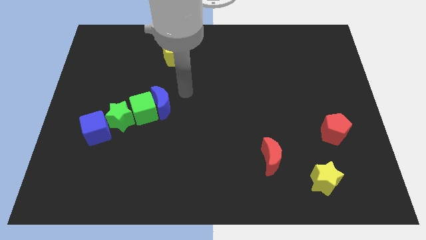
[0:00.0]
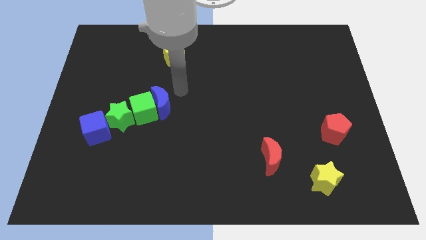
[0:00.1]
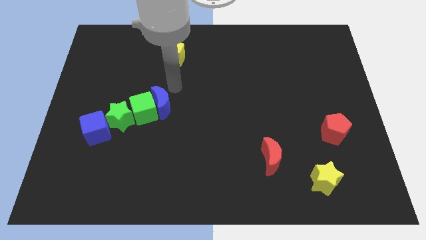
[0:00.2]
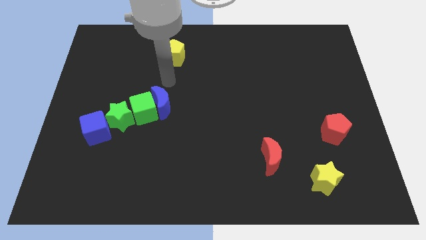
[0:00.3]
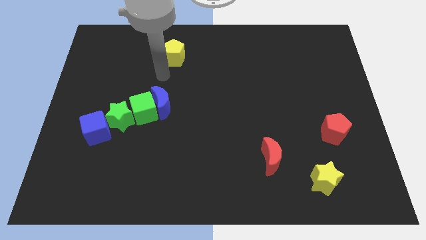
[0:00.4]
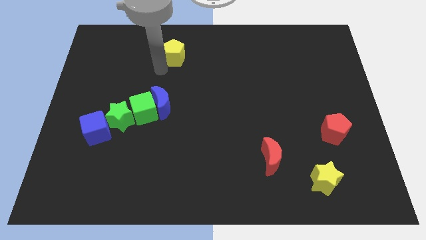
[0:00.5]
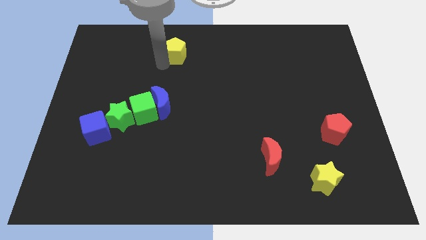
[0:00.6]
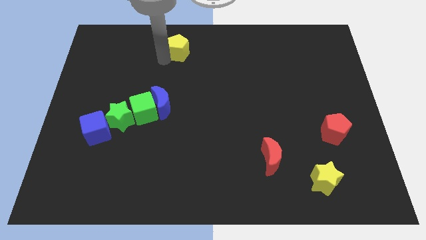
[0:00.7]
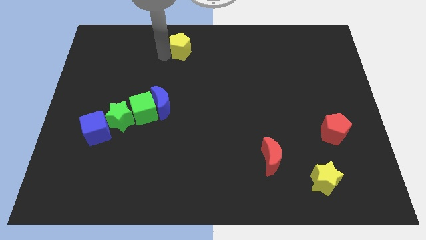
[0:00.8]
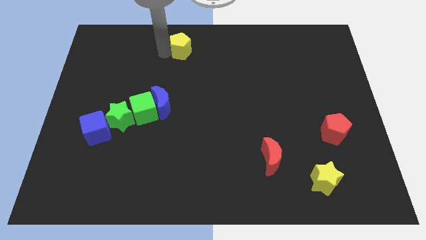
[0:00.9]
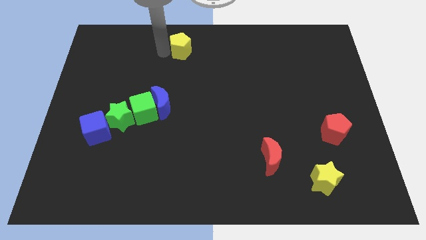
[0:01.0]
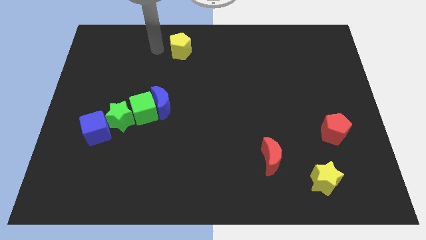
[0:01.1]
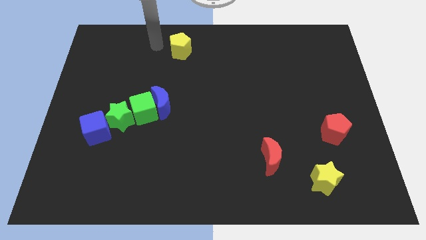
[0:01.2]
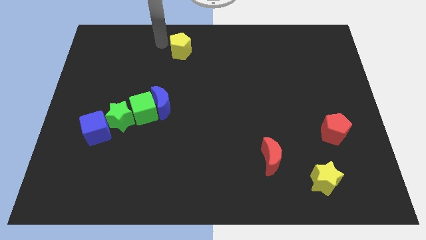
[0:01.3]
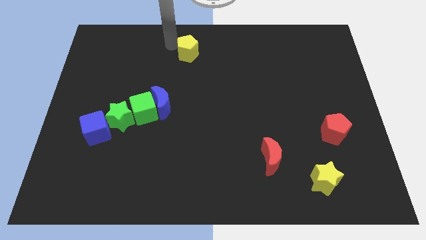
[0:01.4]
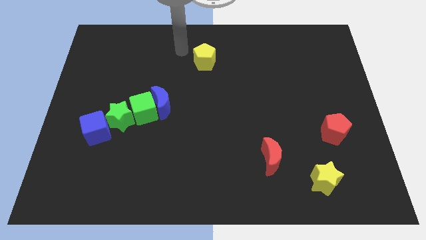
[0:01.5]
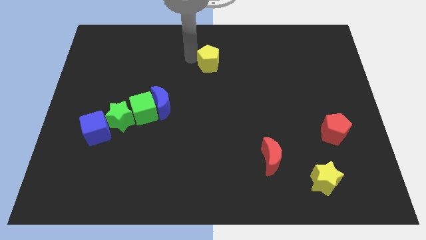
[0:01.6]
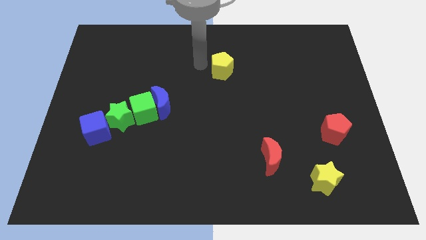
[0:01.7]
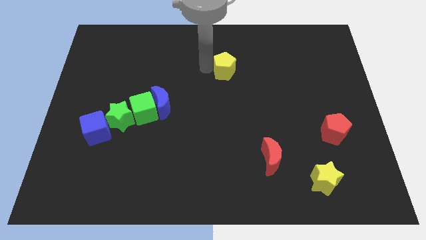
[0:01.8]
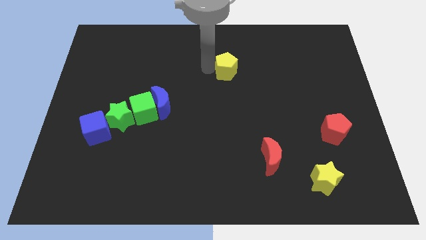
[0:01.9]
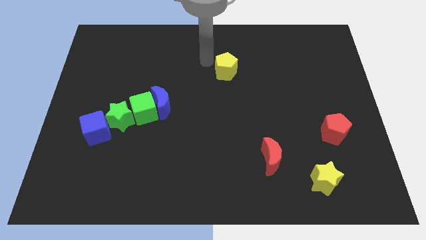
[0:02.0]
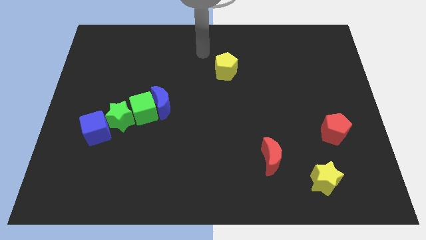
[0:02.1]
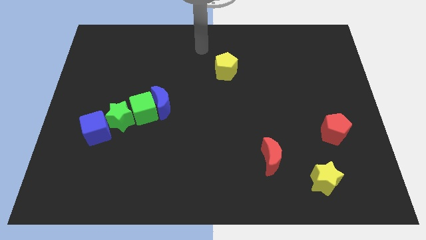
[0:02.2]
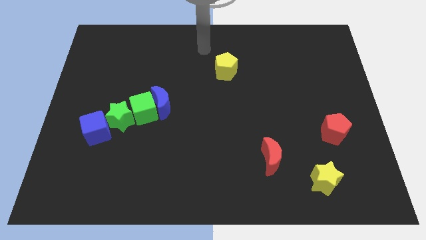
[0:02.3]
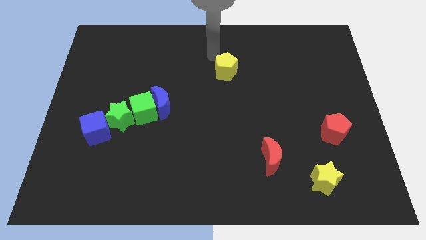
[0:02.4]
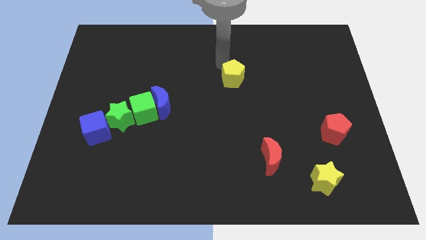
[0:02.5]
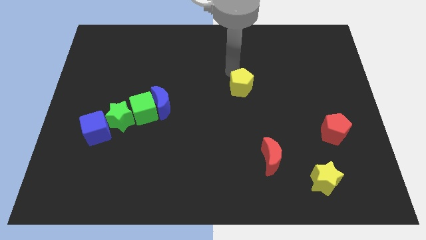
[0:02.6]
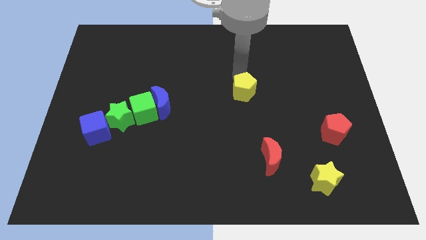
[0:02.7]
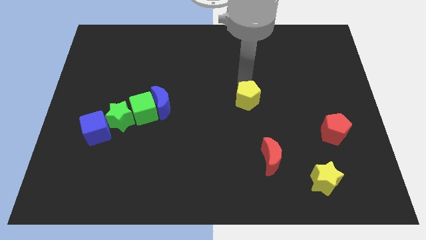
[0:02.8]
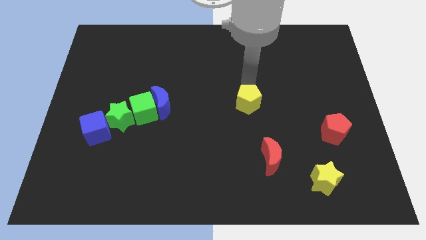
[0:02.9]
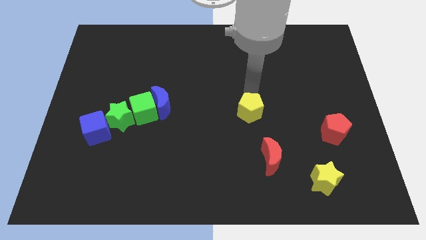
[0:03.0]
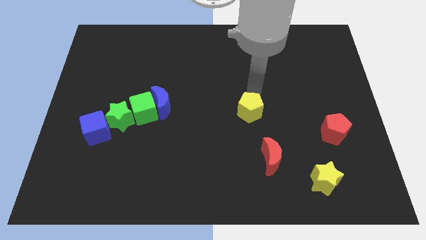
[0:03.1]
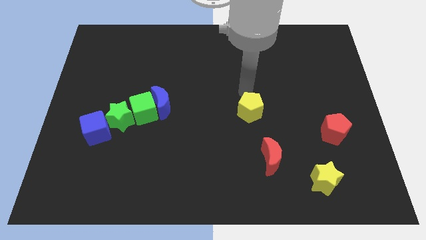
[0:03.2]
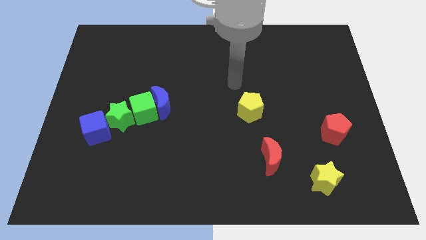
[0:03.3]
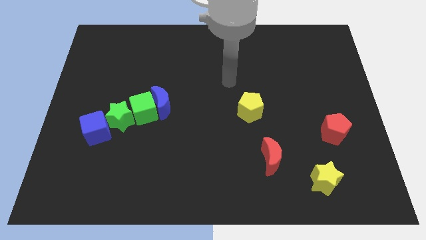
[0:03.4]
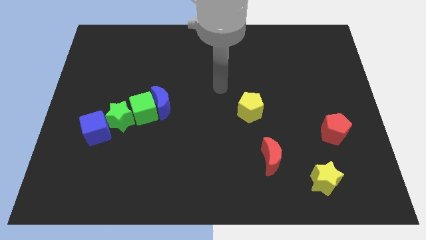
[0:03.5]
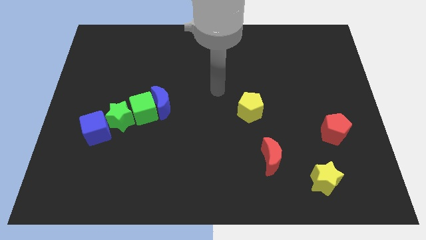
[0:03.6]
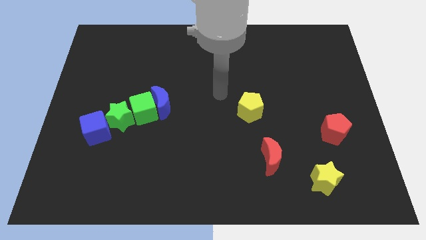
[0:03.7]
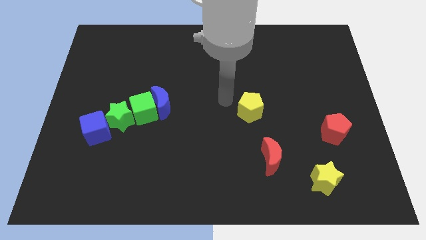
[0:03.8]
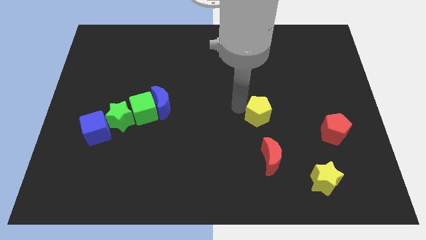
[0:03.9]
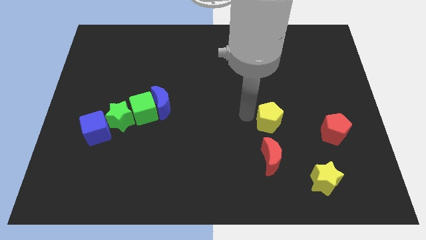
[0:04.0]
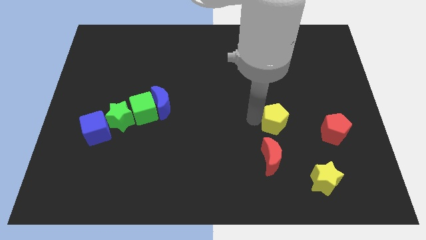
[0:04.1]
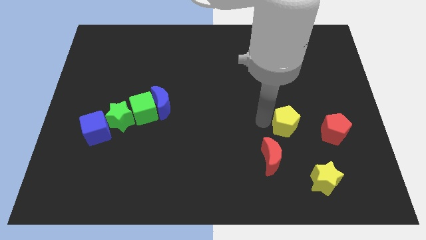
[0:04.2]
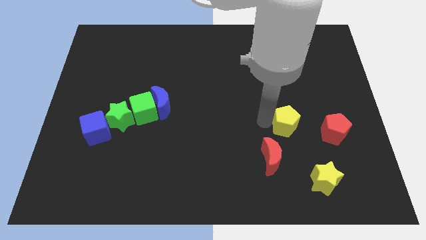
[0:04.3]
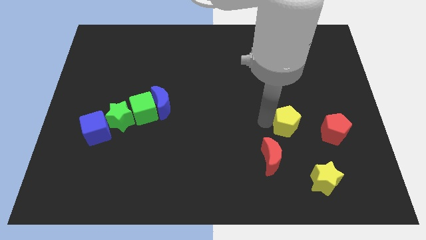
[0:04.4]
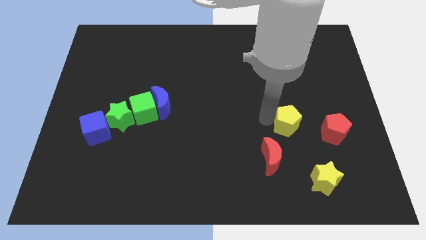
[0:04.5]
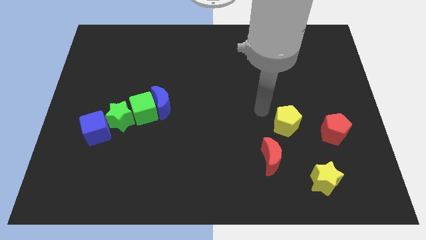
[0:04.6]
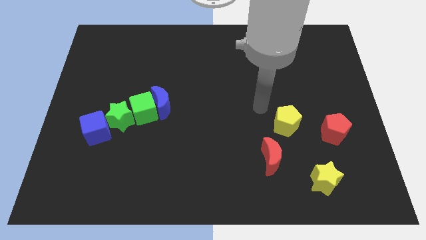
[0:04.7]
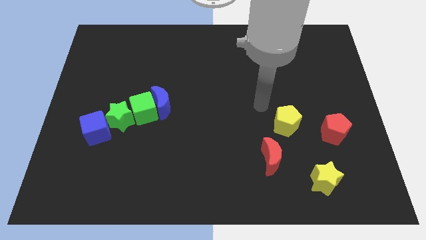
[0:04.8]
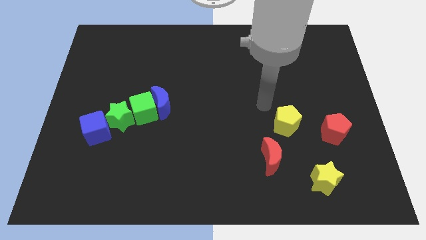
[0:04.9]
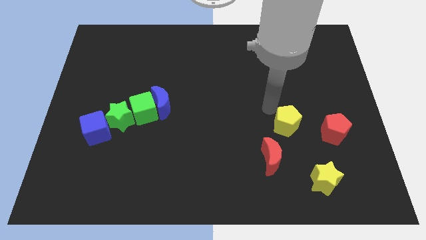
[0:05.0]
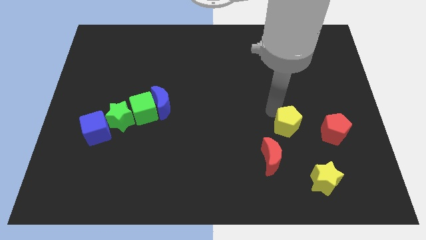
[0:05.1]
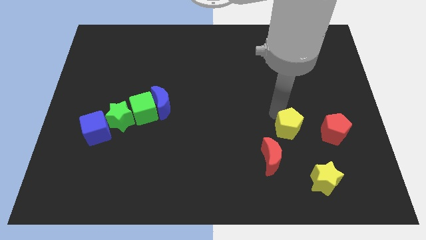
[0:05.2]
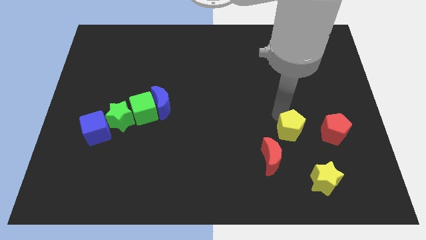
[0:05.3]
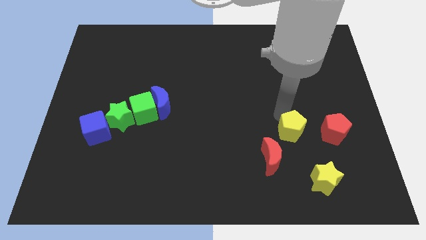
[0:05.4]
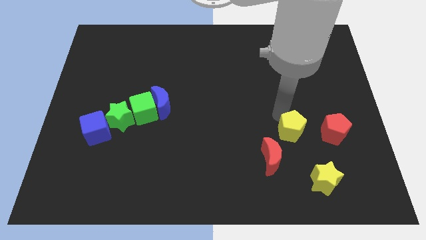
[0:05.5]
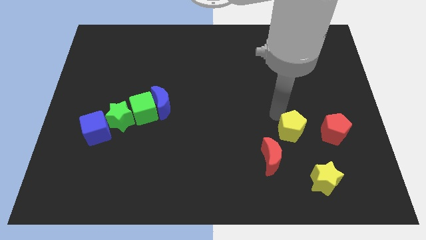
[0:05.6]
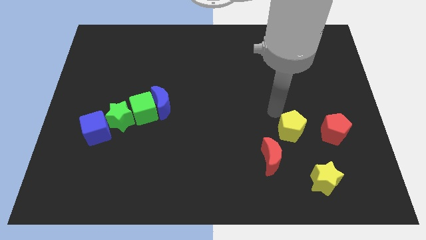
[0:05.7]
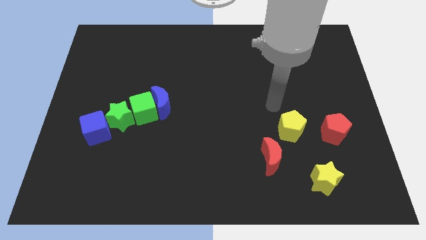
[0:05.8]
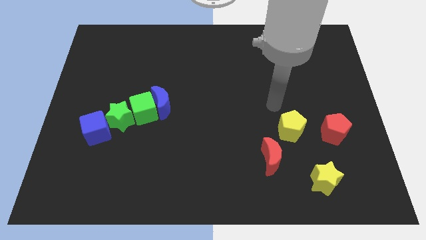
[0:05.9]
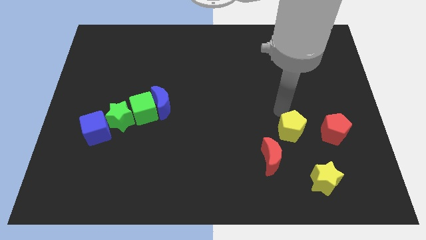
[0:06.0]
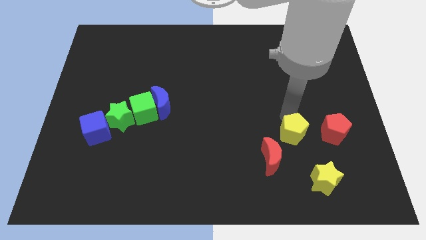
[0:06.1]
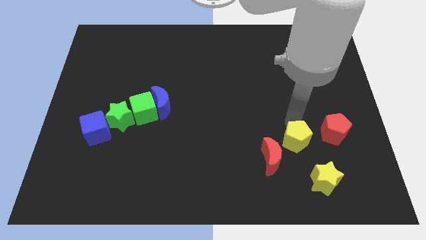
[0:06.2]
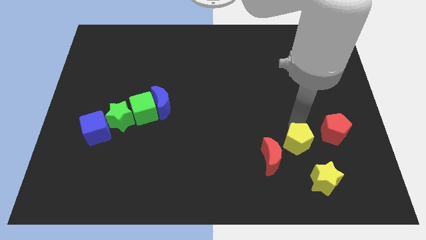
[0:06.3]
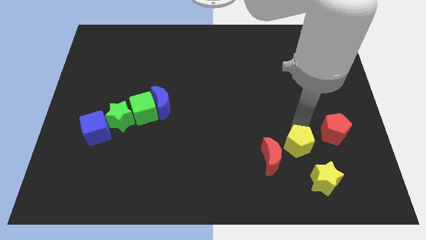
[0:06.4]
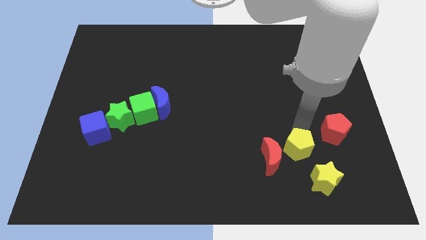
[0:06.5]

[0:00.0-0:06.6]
place the yellow pentagon in between red crescent and red pentagon

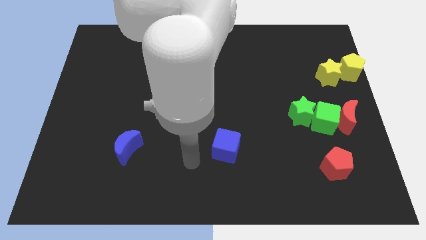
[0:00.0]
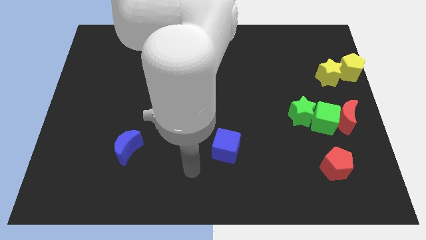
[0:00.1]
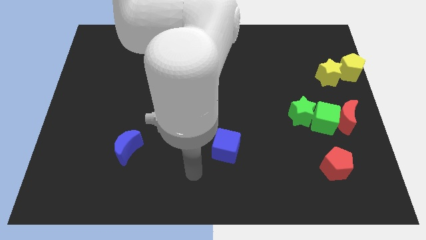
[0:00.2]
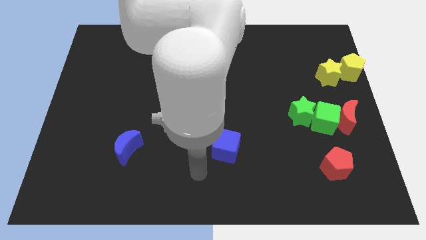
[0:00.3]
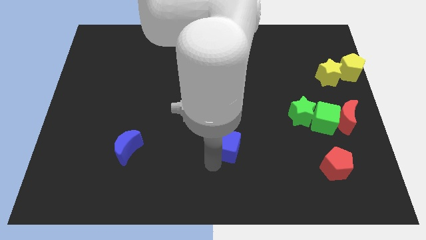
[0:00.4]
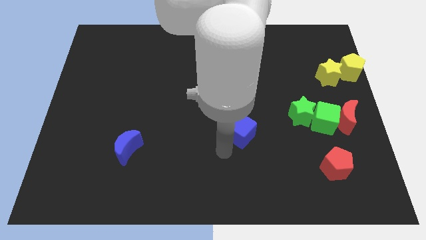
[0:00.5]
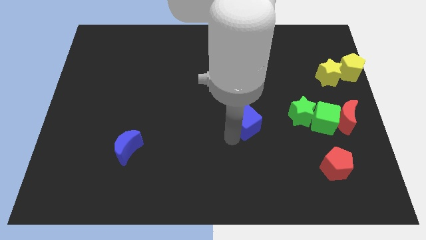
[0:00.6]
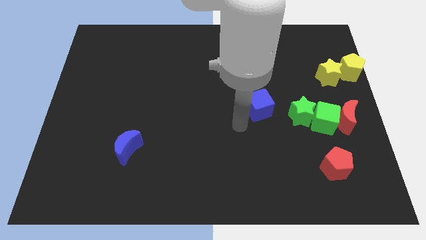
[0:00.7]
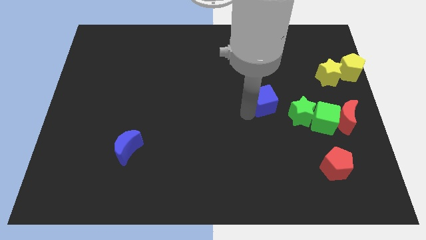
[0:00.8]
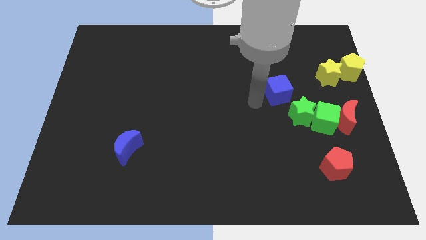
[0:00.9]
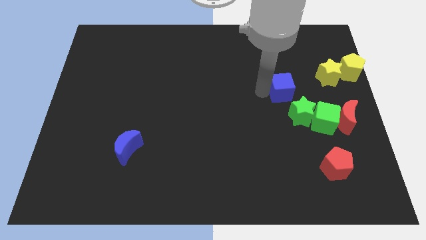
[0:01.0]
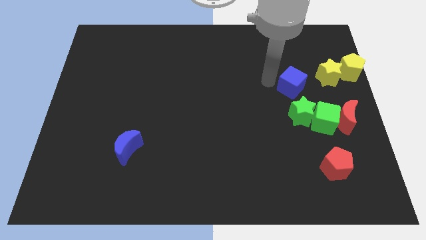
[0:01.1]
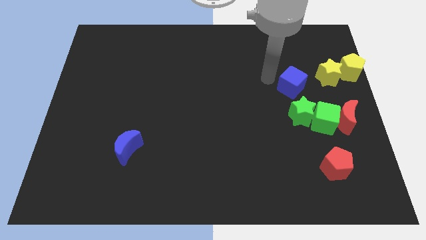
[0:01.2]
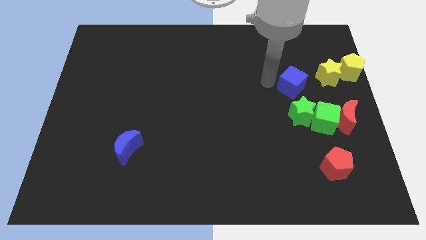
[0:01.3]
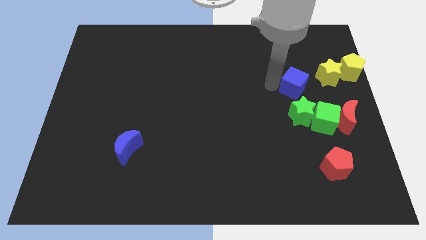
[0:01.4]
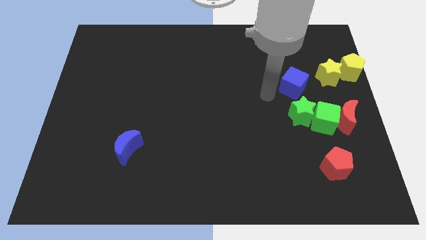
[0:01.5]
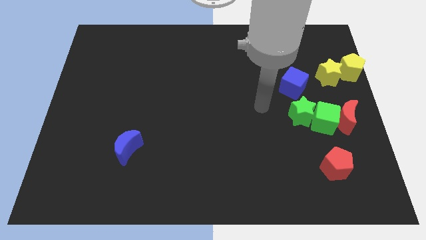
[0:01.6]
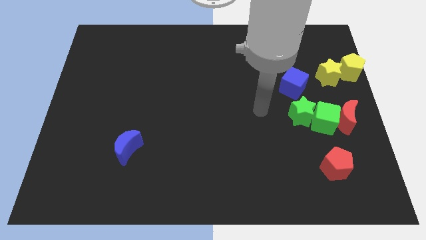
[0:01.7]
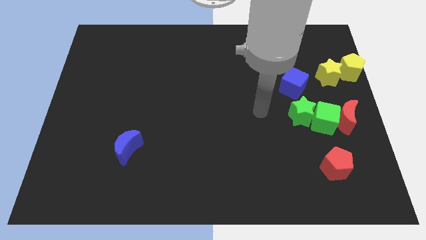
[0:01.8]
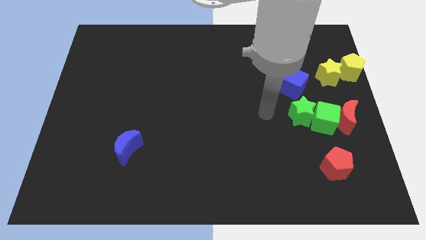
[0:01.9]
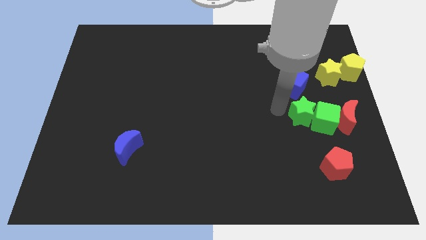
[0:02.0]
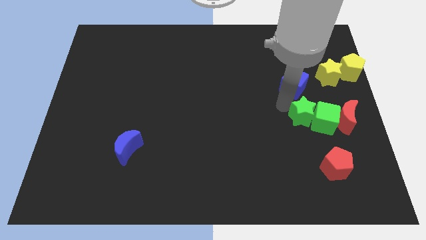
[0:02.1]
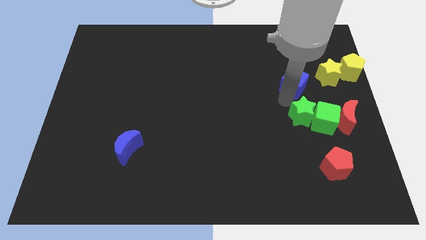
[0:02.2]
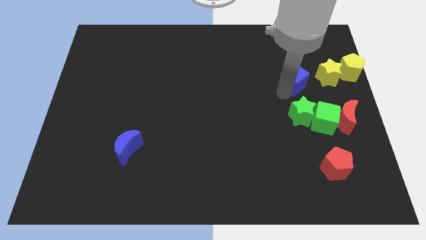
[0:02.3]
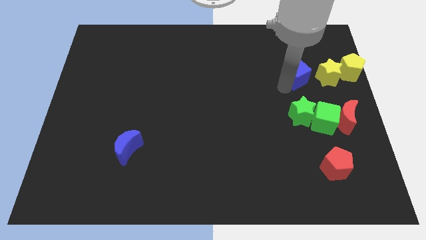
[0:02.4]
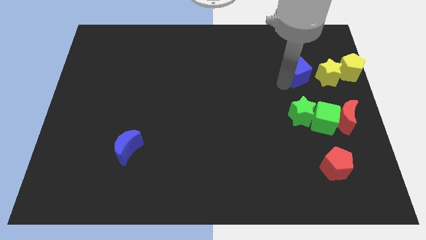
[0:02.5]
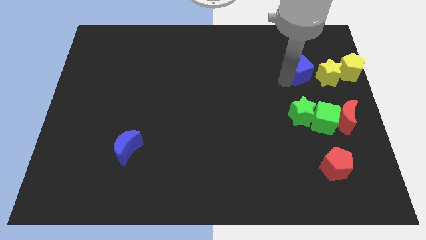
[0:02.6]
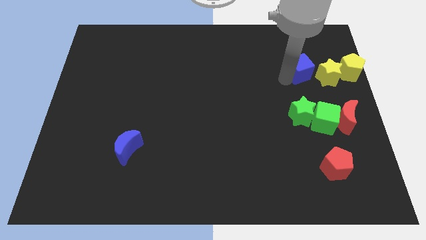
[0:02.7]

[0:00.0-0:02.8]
place blue cube above green star
